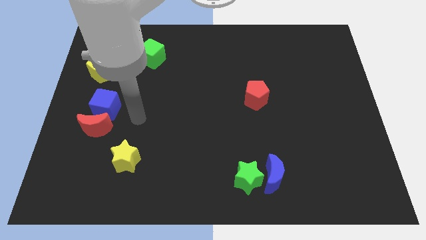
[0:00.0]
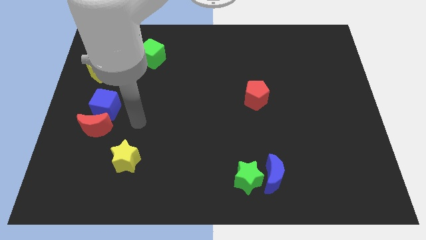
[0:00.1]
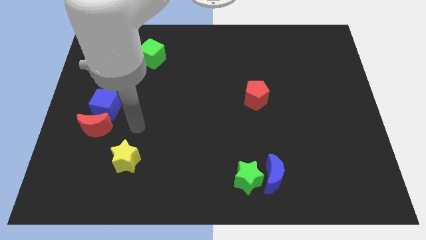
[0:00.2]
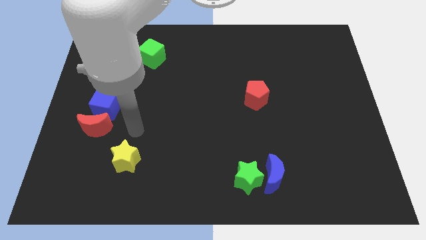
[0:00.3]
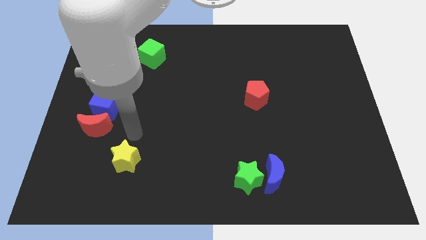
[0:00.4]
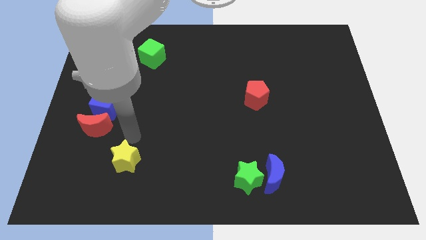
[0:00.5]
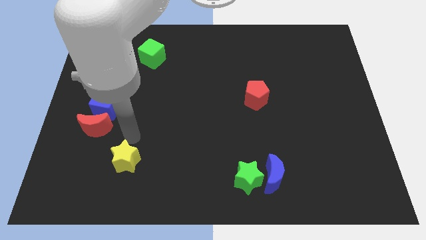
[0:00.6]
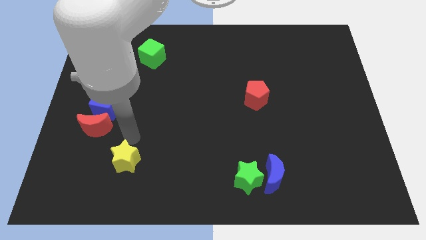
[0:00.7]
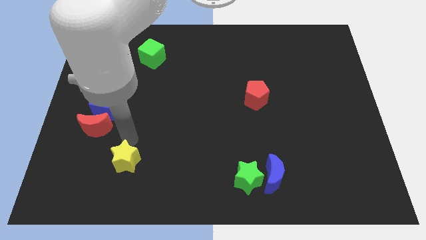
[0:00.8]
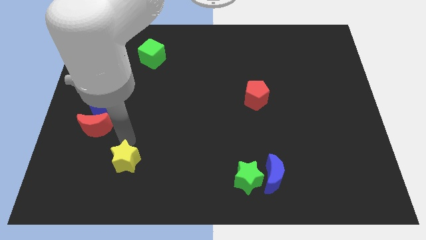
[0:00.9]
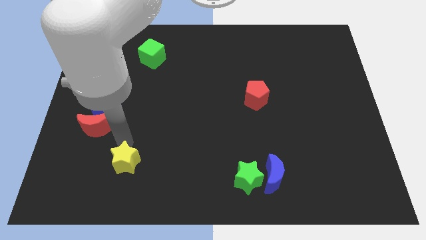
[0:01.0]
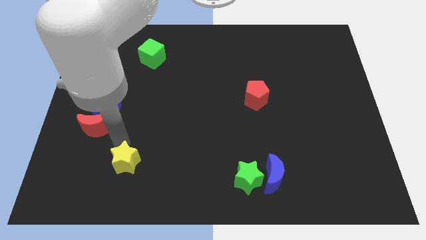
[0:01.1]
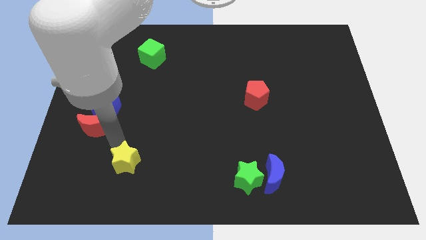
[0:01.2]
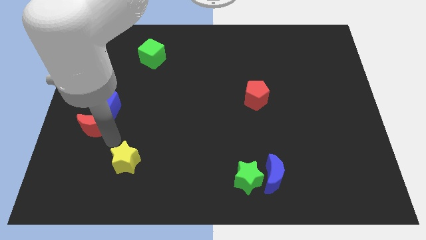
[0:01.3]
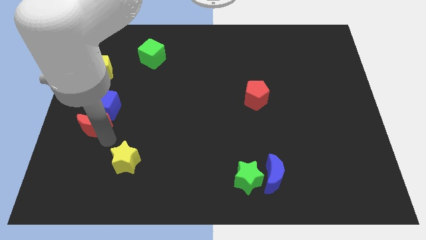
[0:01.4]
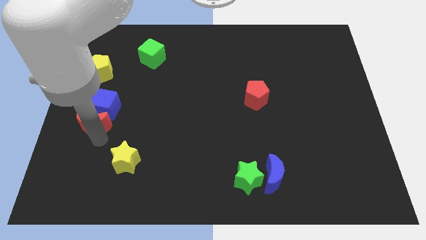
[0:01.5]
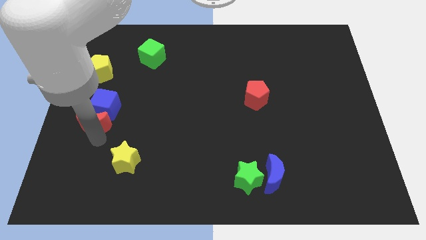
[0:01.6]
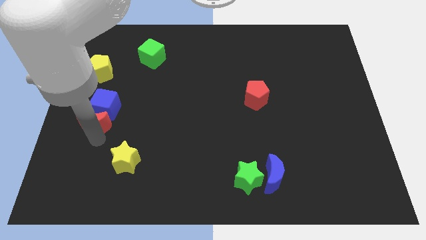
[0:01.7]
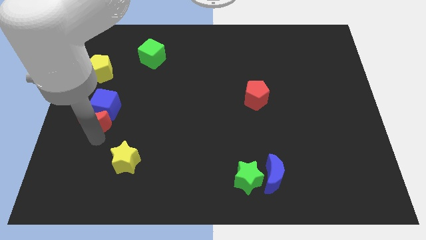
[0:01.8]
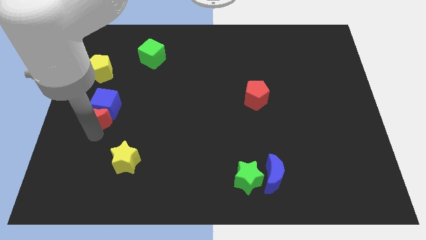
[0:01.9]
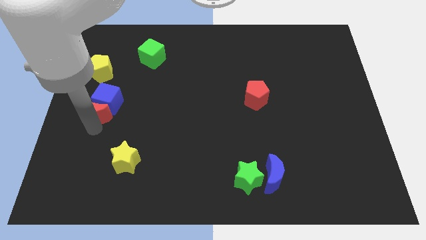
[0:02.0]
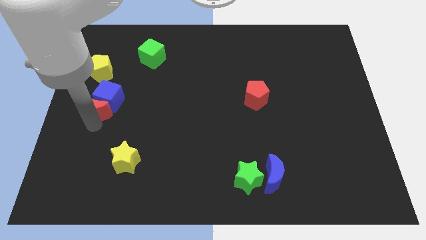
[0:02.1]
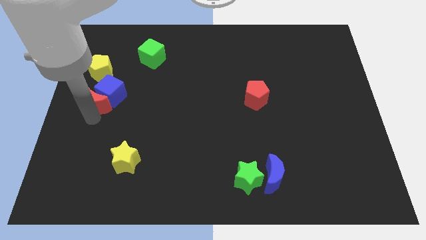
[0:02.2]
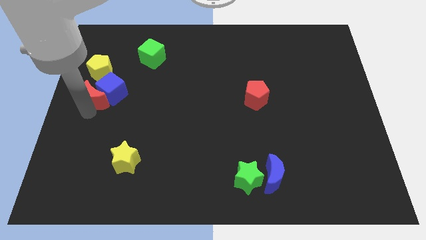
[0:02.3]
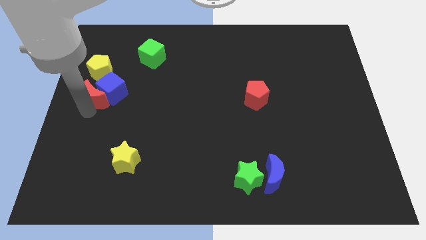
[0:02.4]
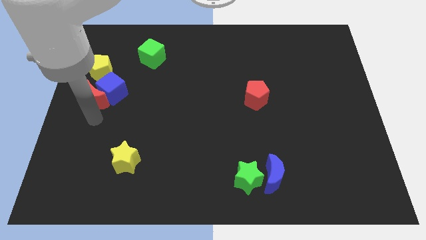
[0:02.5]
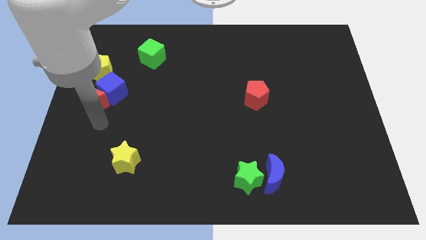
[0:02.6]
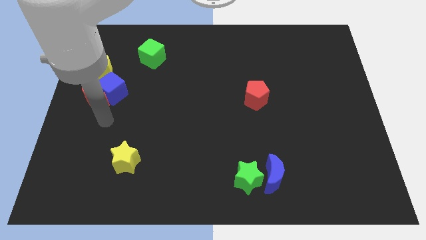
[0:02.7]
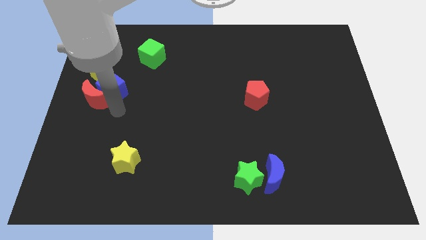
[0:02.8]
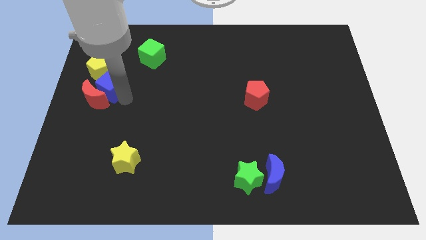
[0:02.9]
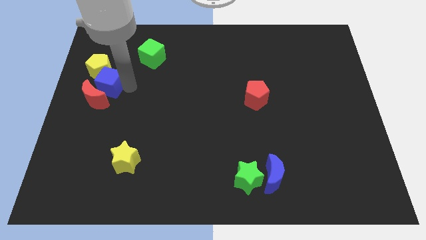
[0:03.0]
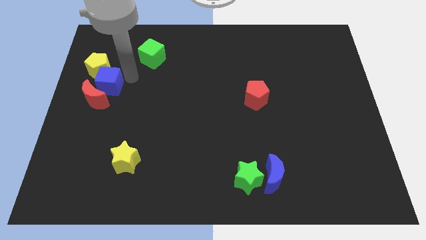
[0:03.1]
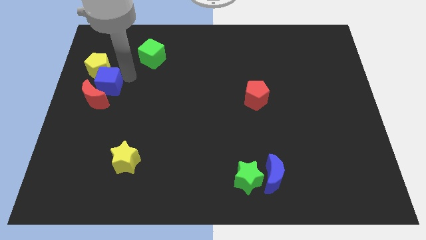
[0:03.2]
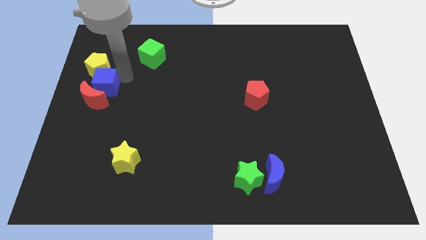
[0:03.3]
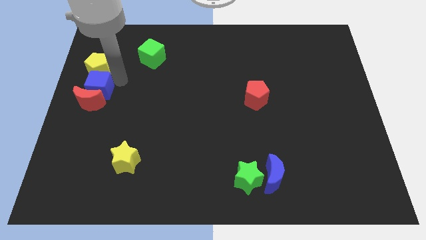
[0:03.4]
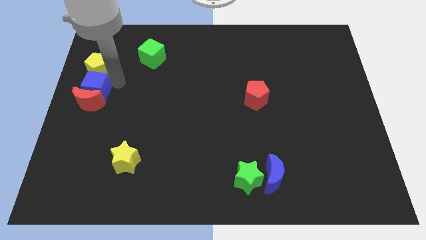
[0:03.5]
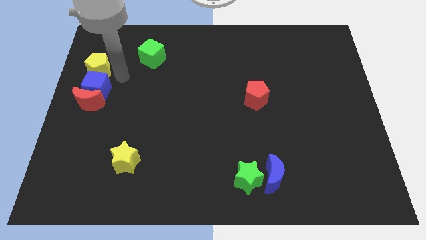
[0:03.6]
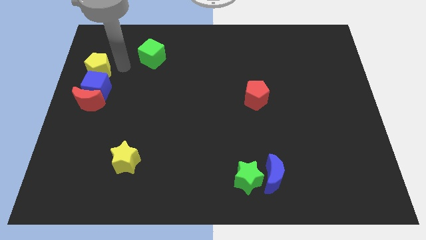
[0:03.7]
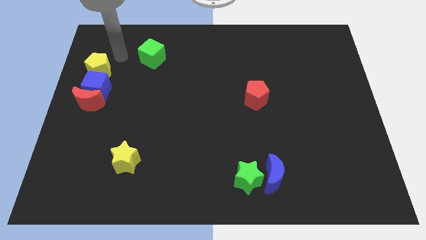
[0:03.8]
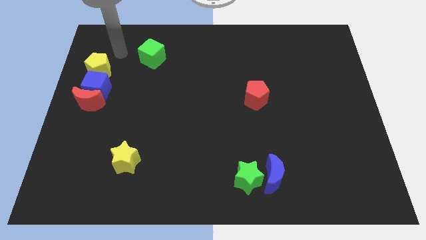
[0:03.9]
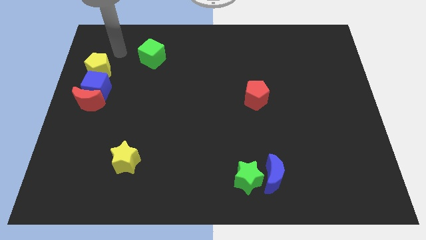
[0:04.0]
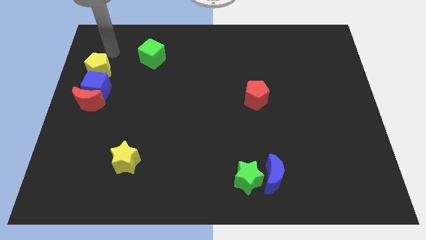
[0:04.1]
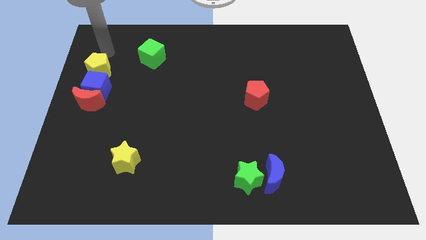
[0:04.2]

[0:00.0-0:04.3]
push the red moon and blue cube together to the top left side of the board

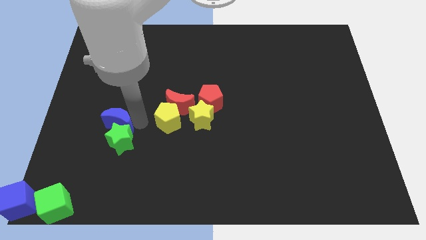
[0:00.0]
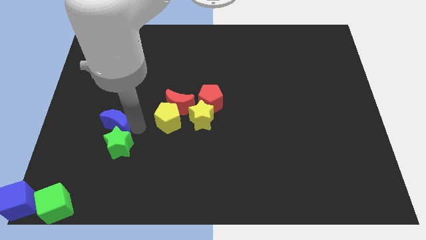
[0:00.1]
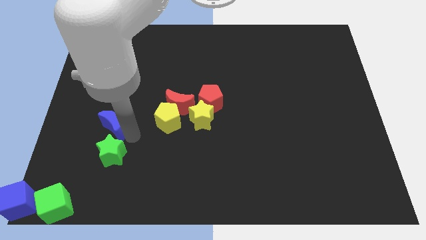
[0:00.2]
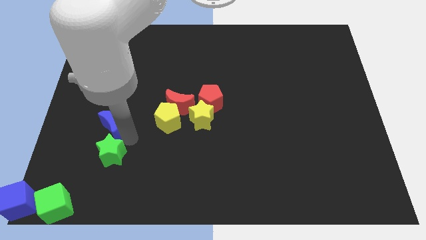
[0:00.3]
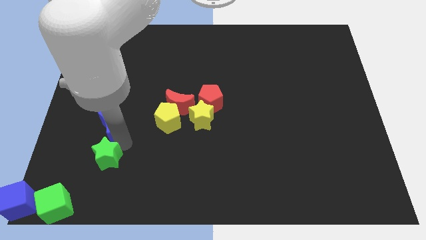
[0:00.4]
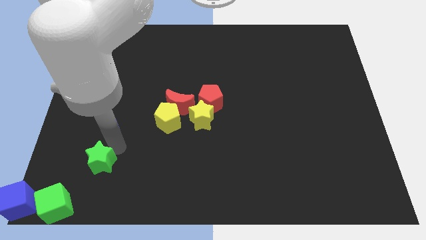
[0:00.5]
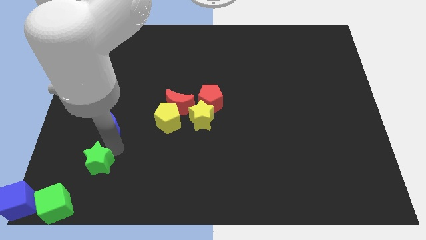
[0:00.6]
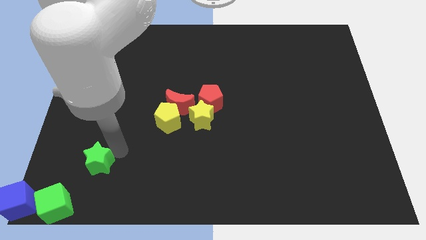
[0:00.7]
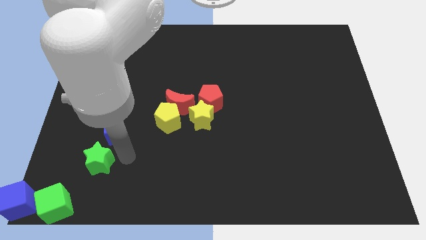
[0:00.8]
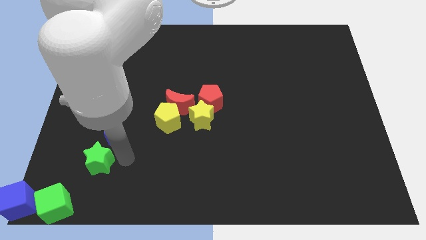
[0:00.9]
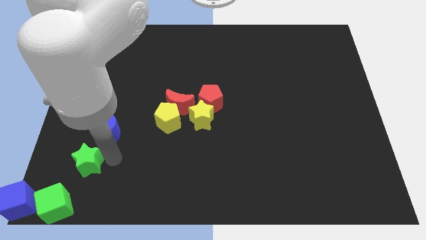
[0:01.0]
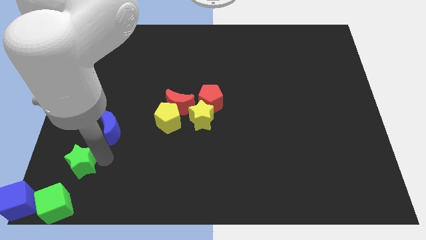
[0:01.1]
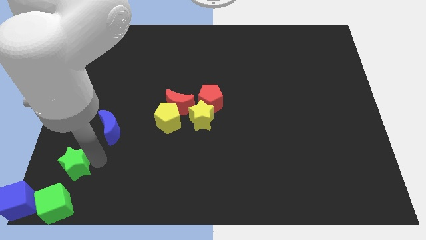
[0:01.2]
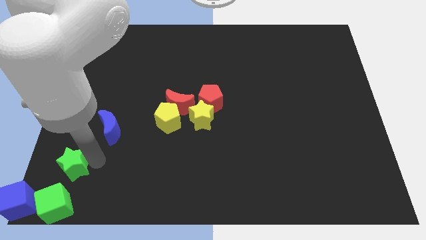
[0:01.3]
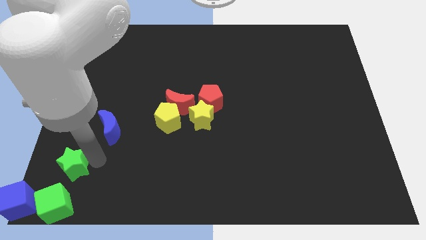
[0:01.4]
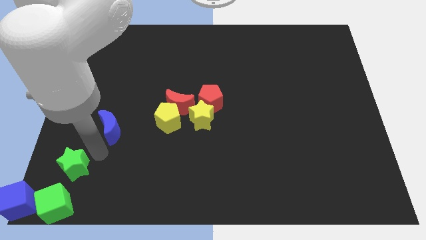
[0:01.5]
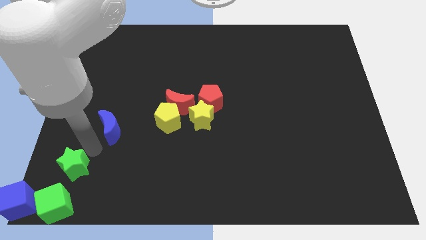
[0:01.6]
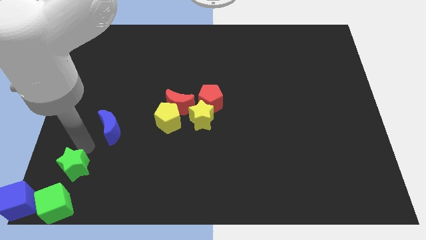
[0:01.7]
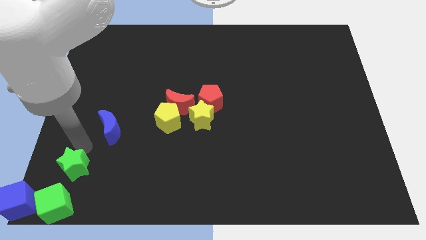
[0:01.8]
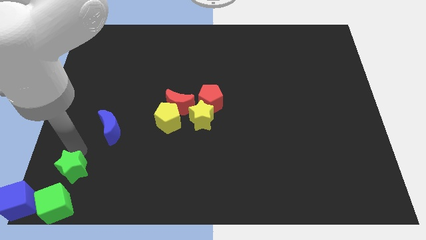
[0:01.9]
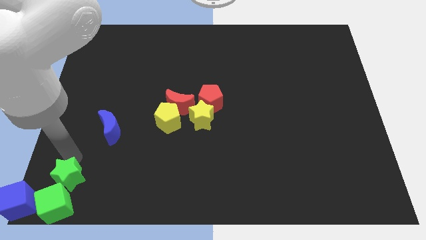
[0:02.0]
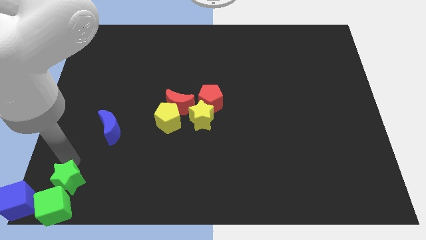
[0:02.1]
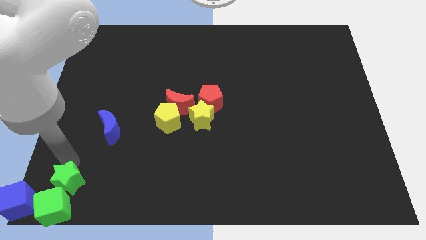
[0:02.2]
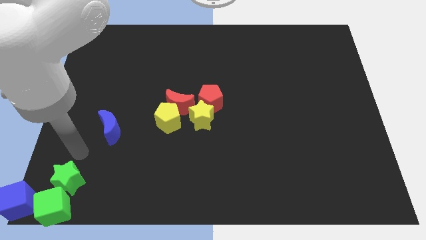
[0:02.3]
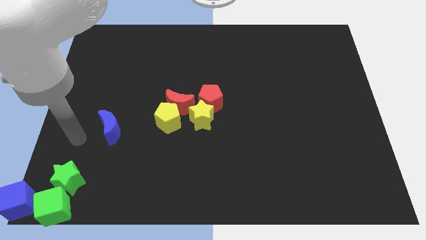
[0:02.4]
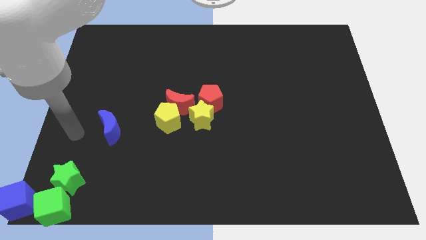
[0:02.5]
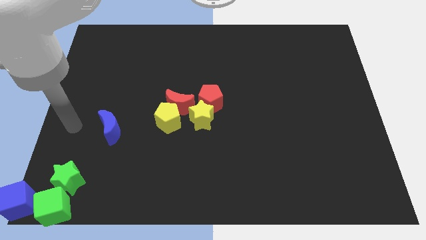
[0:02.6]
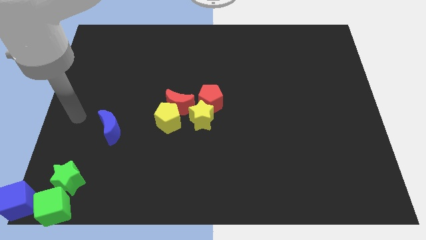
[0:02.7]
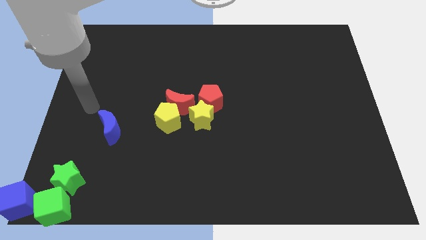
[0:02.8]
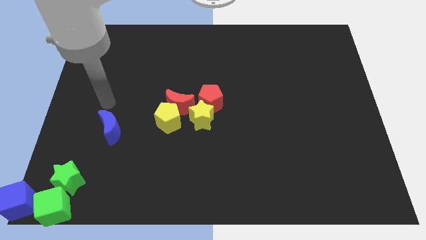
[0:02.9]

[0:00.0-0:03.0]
move green star towards green cube

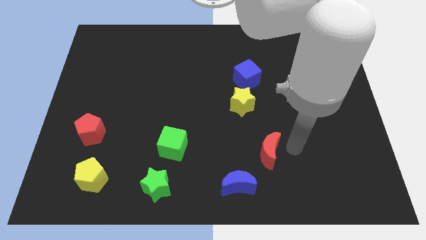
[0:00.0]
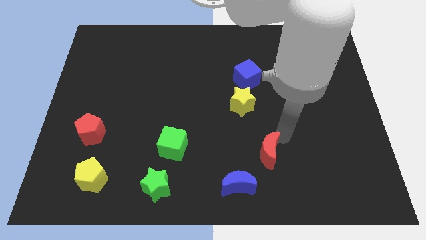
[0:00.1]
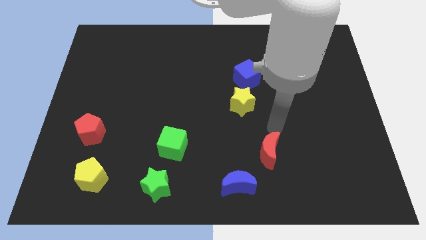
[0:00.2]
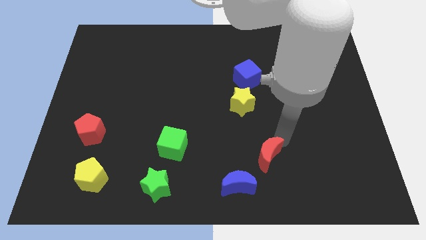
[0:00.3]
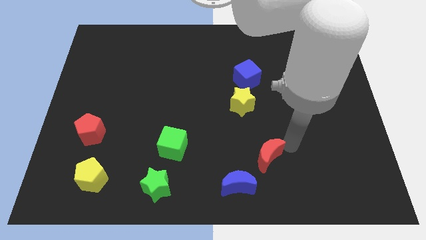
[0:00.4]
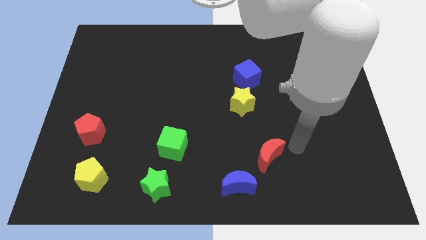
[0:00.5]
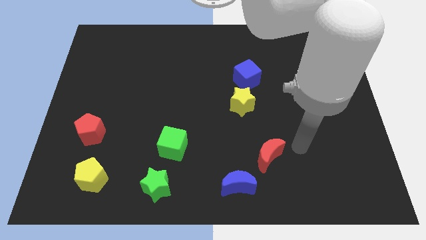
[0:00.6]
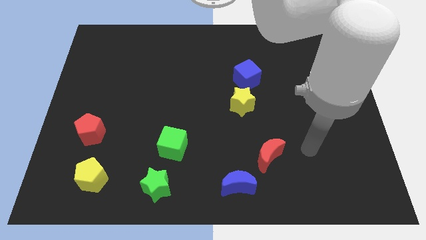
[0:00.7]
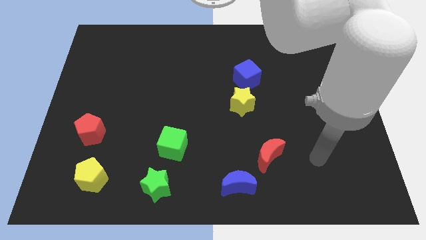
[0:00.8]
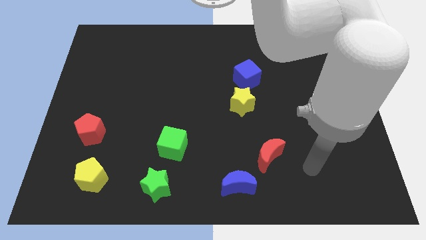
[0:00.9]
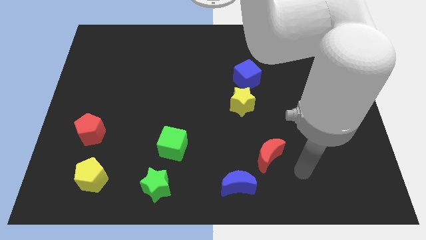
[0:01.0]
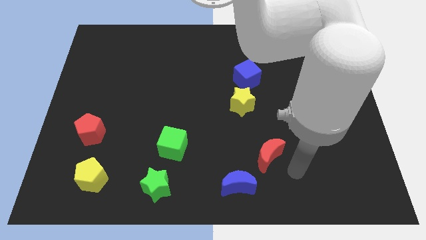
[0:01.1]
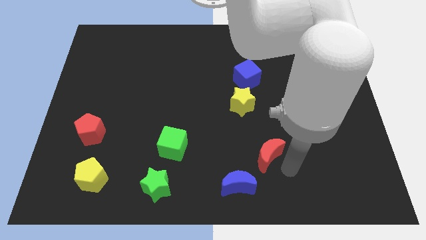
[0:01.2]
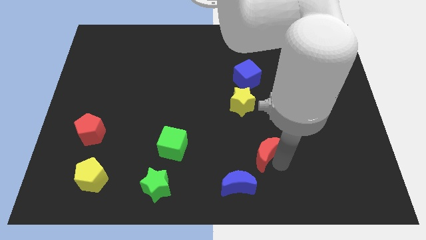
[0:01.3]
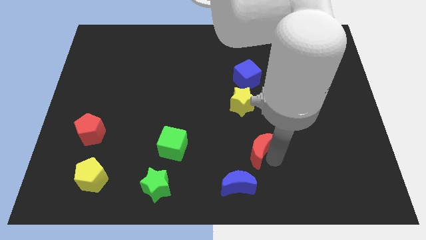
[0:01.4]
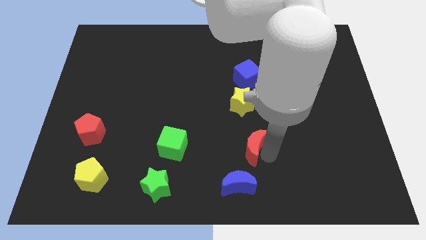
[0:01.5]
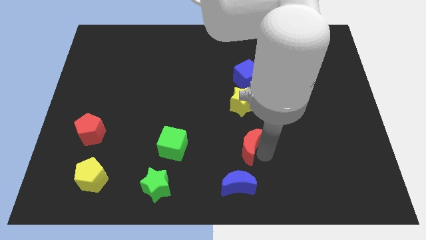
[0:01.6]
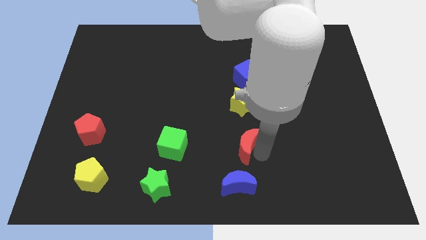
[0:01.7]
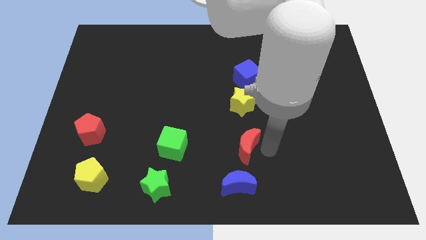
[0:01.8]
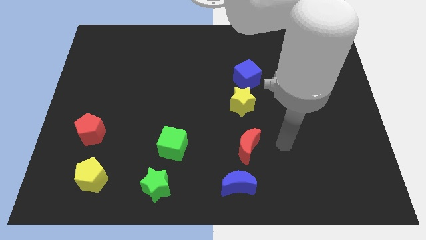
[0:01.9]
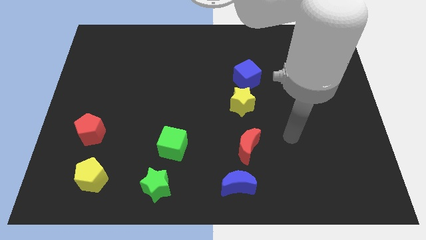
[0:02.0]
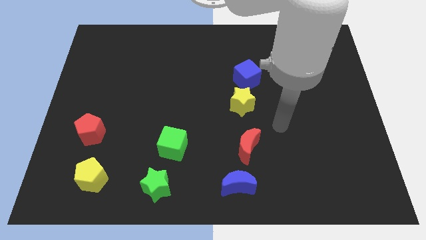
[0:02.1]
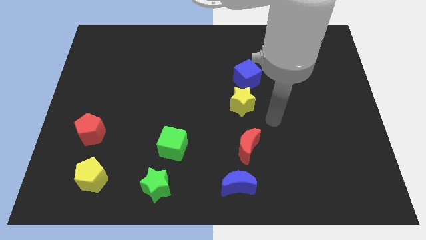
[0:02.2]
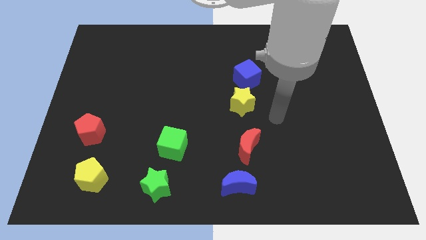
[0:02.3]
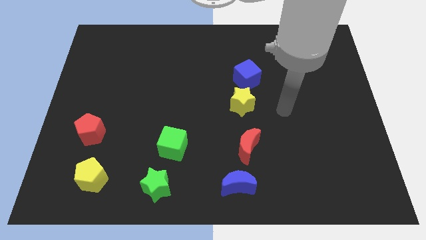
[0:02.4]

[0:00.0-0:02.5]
place the red crescent above the blue crescent
